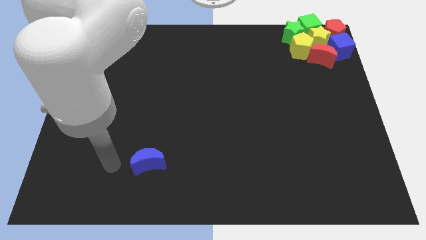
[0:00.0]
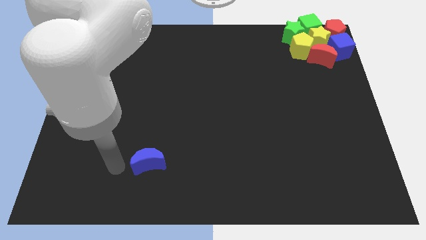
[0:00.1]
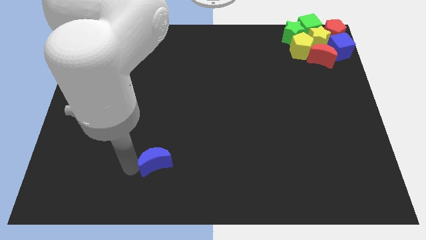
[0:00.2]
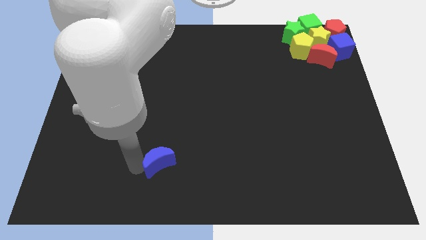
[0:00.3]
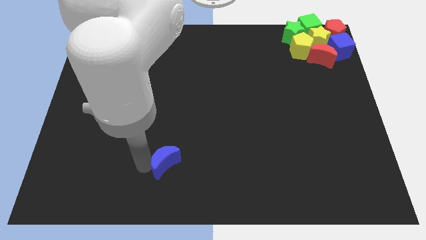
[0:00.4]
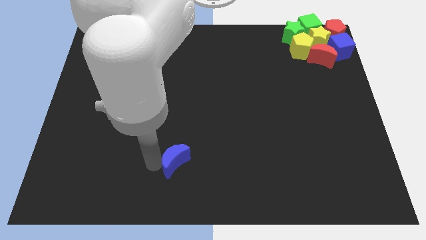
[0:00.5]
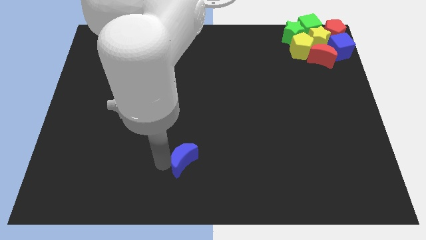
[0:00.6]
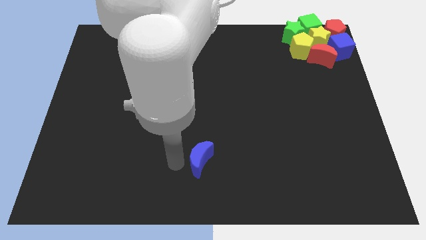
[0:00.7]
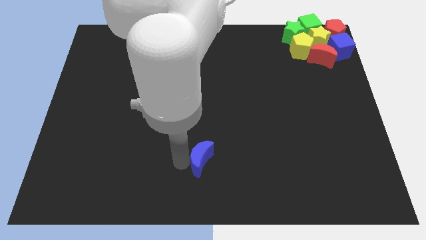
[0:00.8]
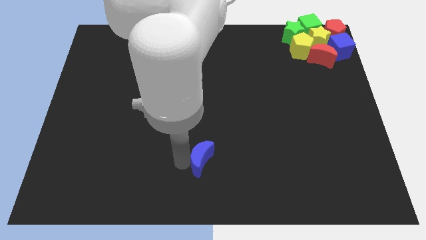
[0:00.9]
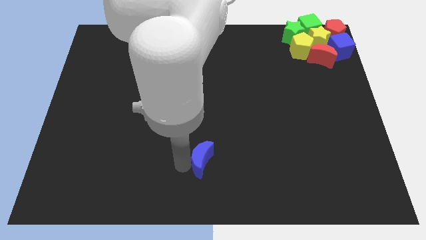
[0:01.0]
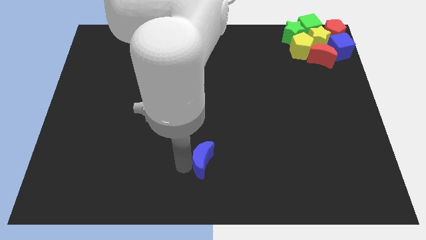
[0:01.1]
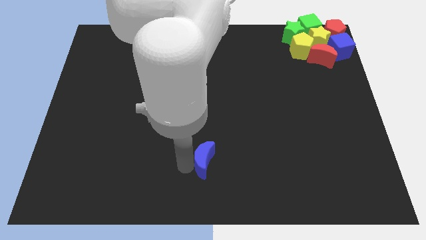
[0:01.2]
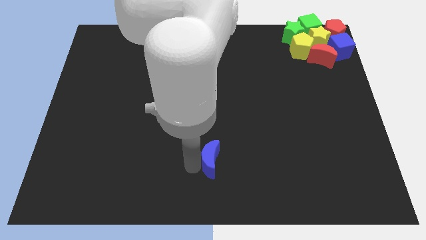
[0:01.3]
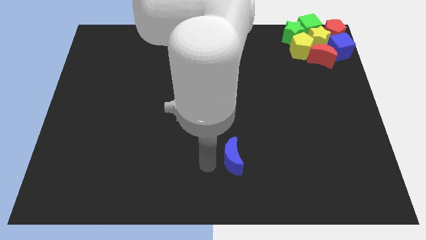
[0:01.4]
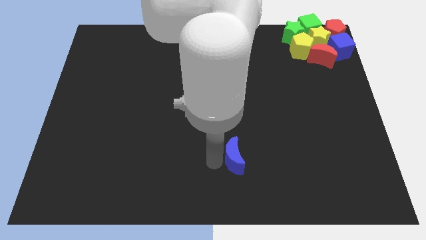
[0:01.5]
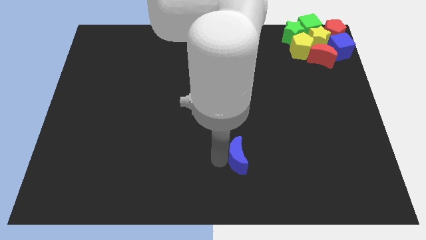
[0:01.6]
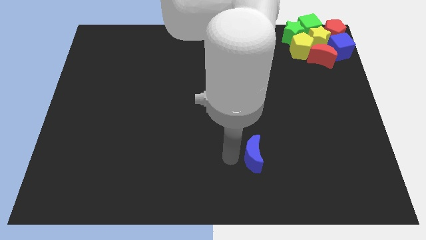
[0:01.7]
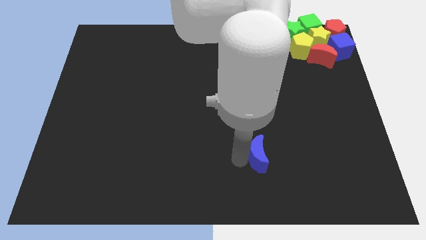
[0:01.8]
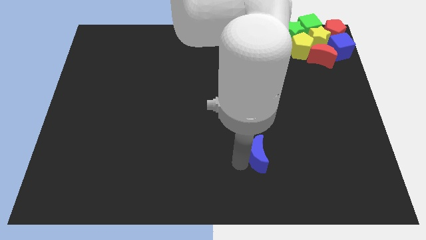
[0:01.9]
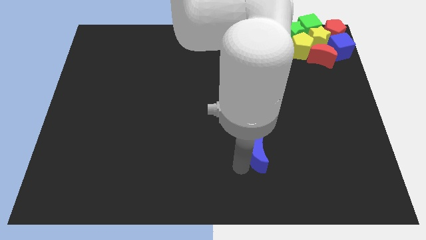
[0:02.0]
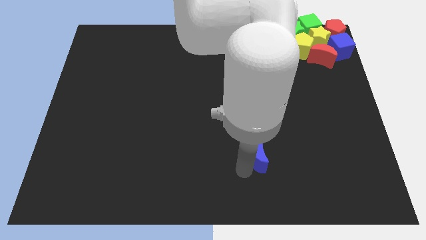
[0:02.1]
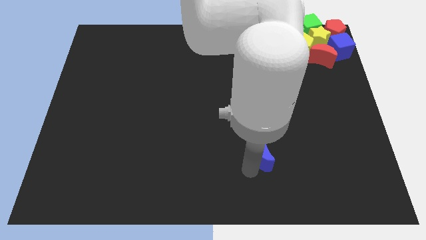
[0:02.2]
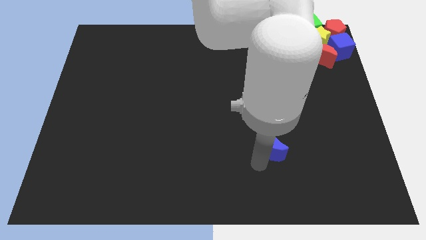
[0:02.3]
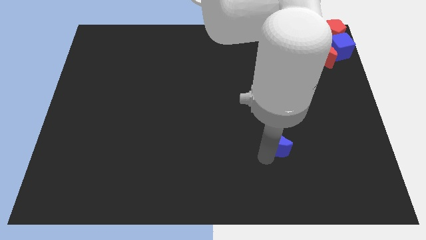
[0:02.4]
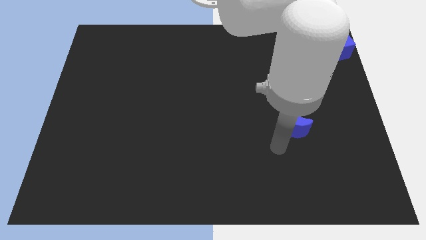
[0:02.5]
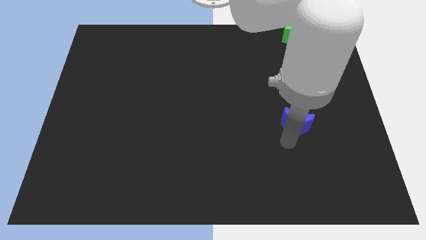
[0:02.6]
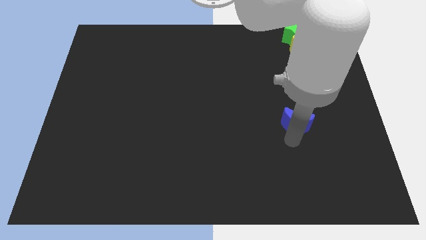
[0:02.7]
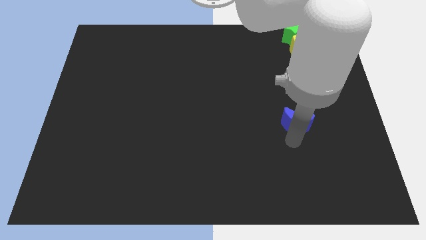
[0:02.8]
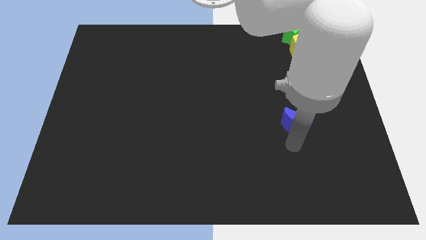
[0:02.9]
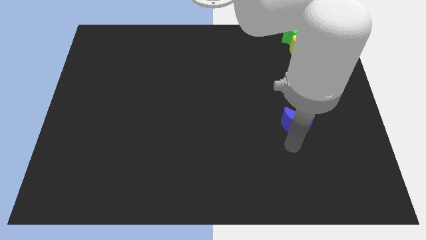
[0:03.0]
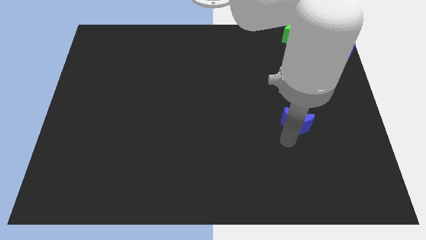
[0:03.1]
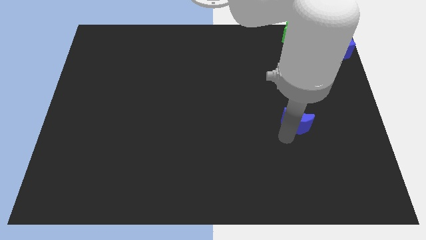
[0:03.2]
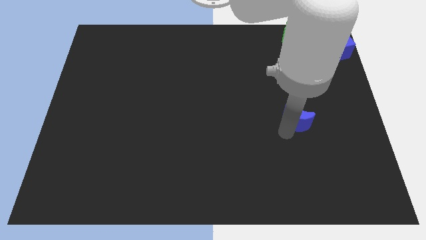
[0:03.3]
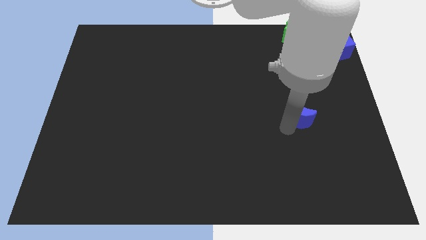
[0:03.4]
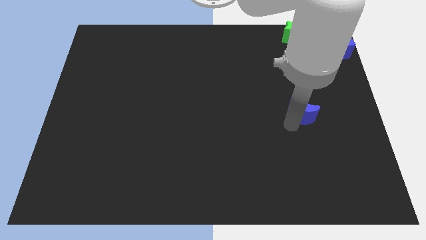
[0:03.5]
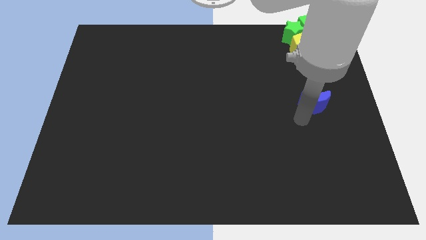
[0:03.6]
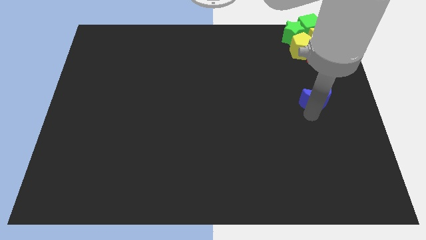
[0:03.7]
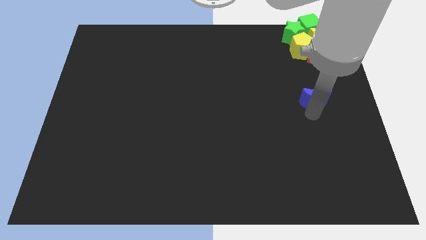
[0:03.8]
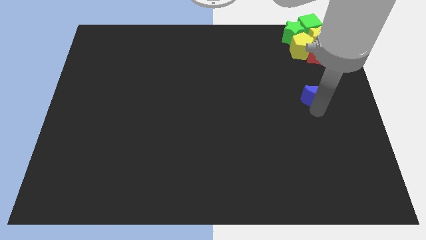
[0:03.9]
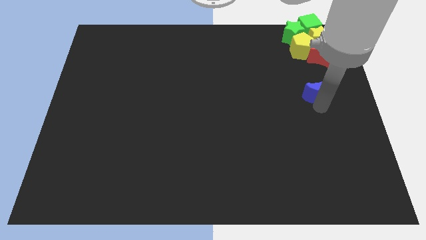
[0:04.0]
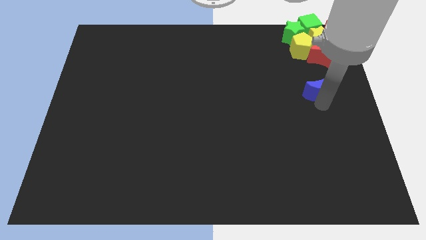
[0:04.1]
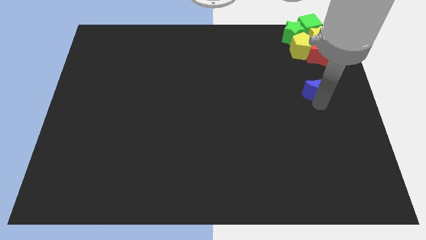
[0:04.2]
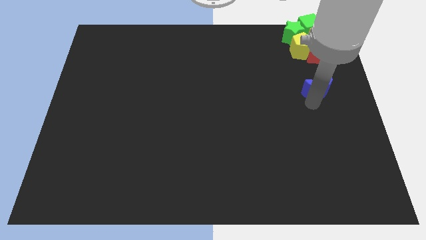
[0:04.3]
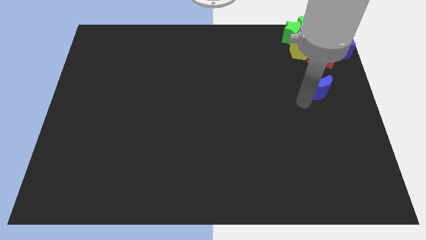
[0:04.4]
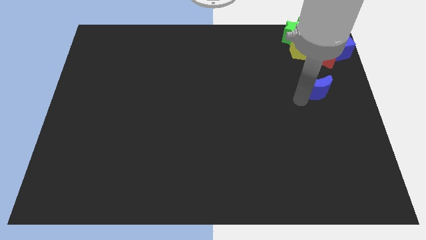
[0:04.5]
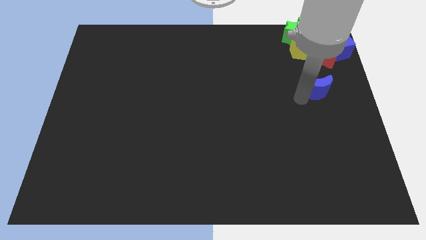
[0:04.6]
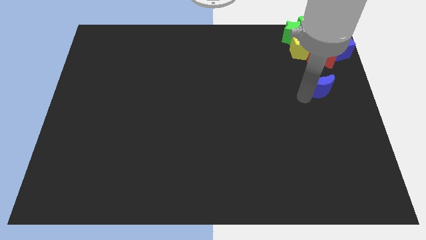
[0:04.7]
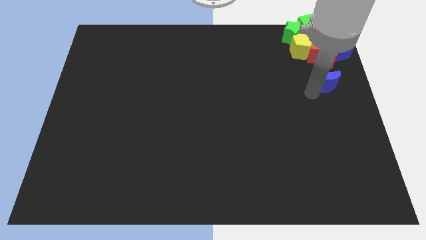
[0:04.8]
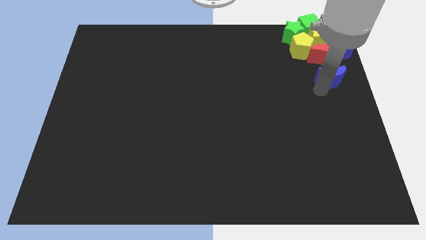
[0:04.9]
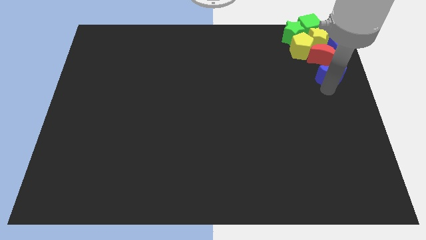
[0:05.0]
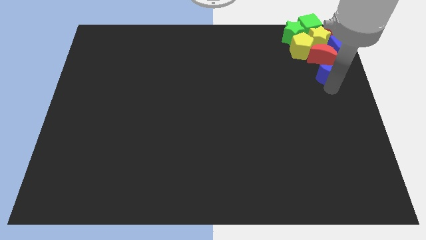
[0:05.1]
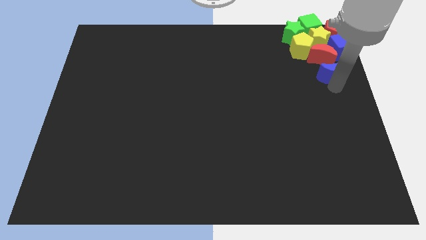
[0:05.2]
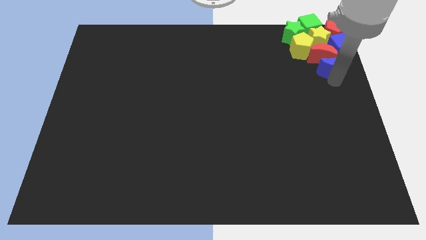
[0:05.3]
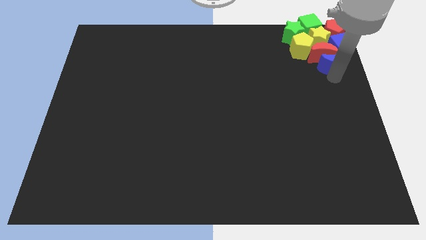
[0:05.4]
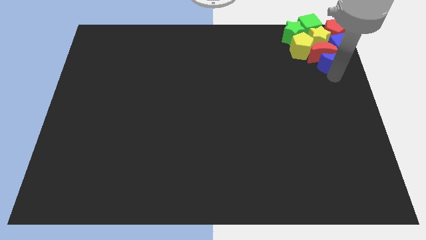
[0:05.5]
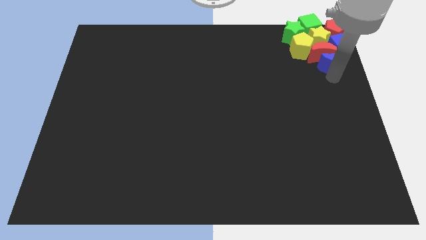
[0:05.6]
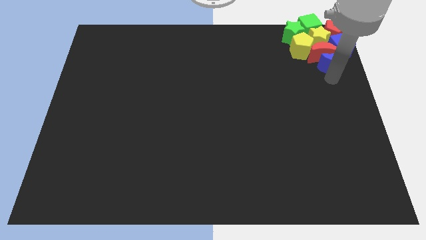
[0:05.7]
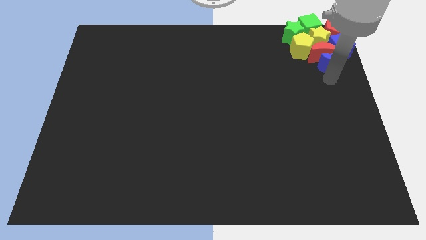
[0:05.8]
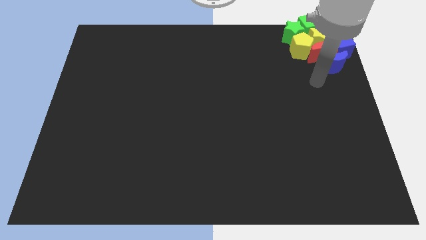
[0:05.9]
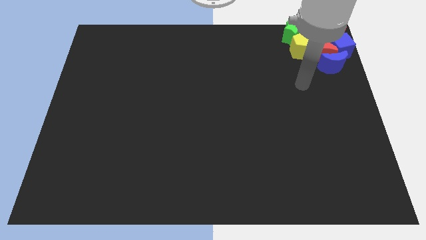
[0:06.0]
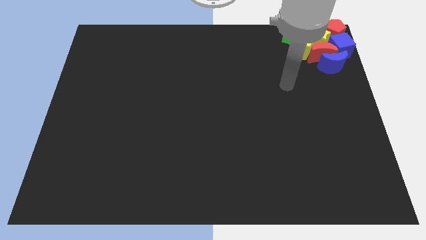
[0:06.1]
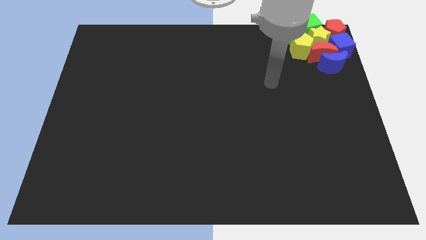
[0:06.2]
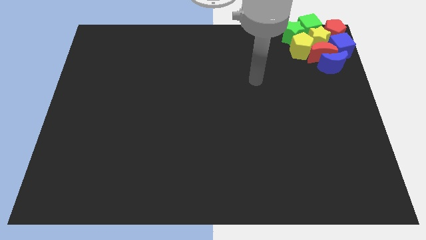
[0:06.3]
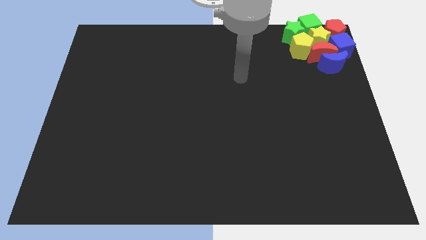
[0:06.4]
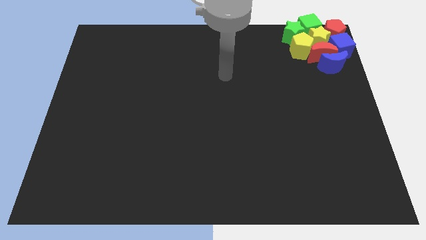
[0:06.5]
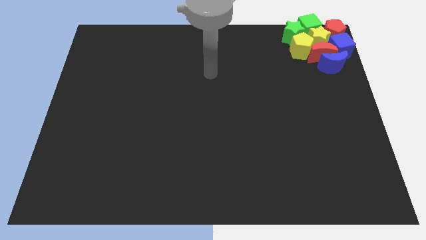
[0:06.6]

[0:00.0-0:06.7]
place the blue moon below the group of blocks arranged at the top right corner of the board

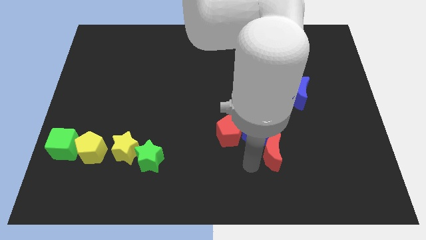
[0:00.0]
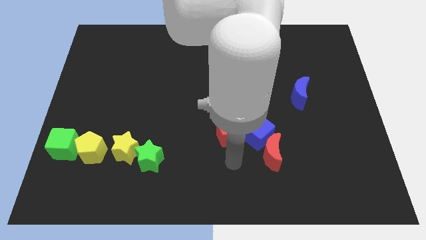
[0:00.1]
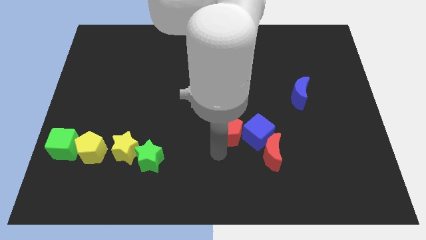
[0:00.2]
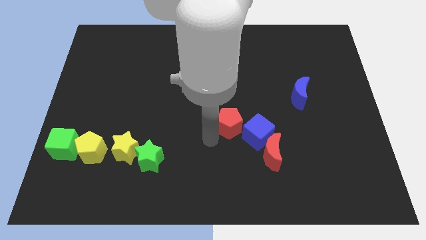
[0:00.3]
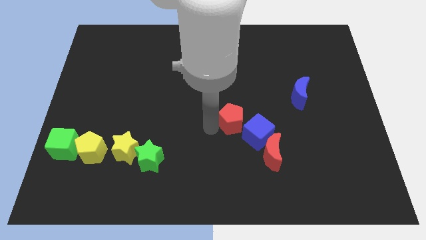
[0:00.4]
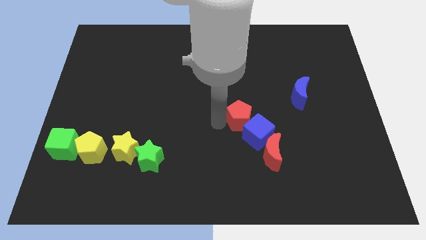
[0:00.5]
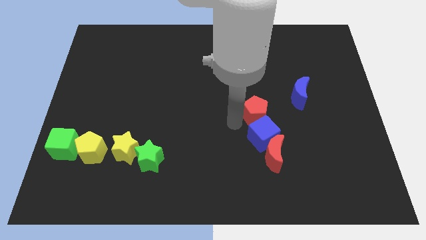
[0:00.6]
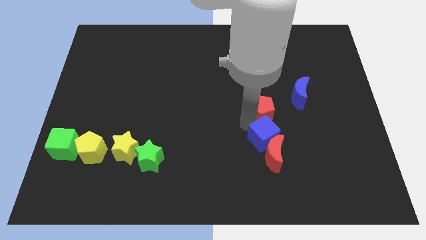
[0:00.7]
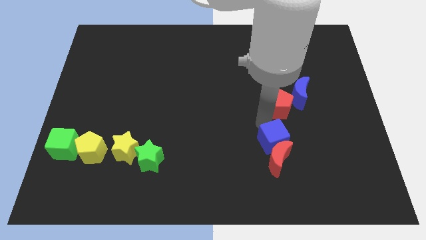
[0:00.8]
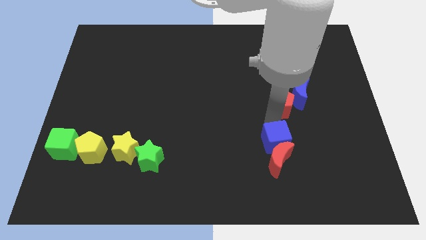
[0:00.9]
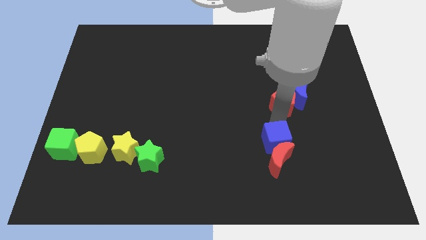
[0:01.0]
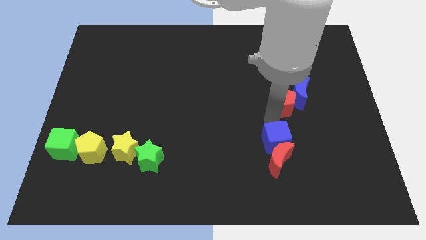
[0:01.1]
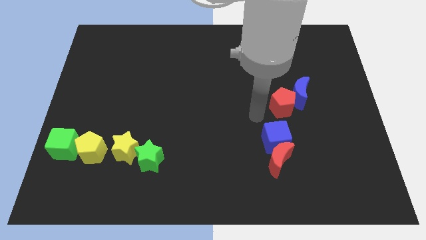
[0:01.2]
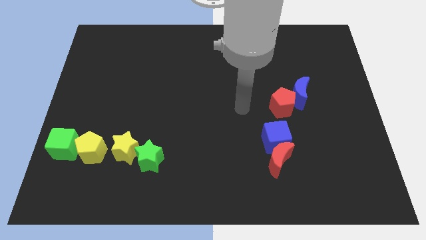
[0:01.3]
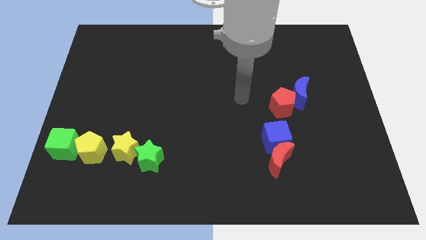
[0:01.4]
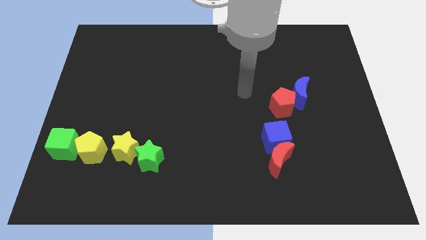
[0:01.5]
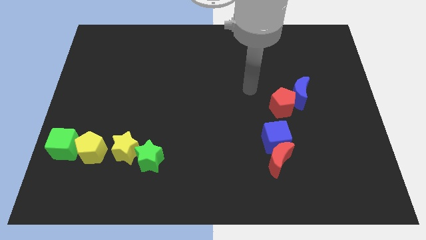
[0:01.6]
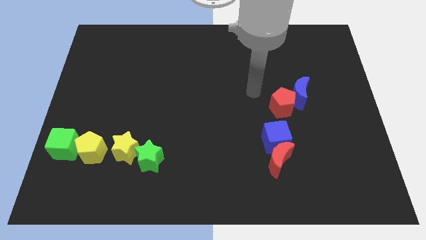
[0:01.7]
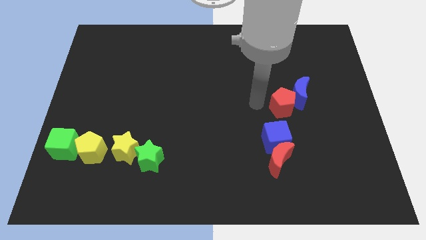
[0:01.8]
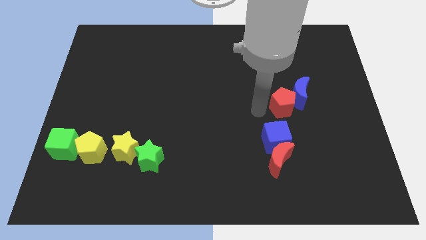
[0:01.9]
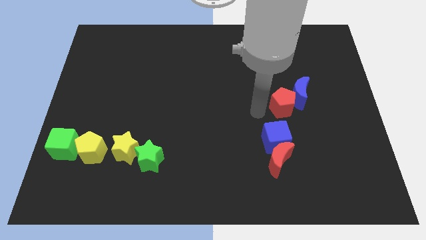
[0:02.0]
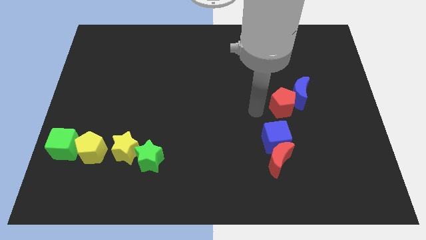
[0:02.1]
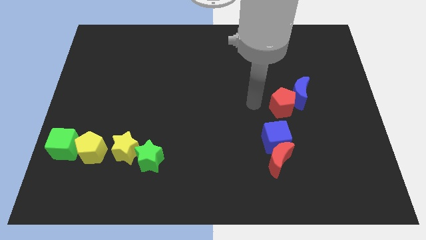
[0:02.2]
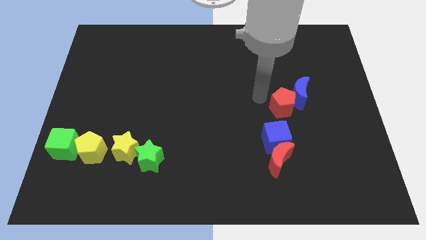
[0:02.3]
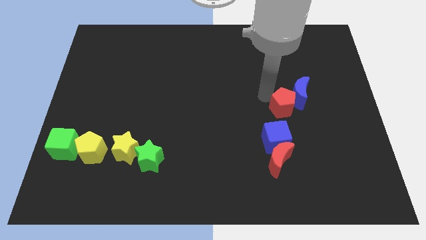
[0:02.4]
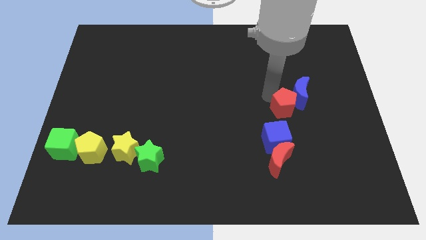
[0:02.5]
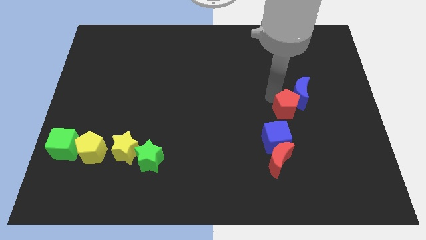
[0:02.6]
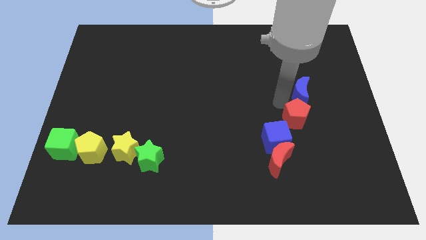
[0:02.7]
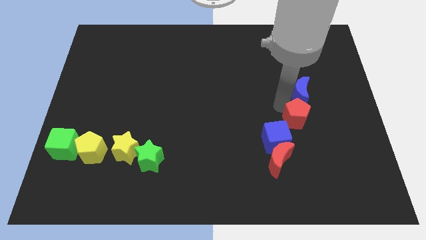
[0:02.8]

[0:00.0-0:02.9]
move the red pentagon to the bottom of blue crescent
